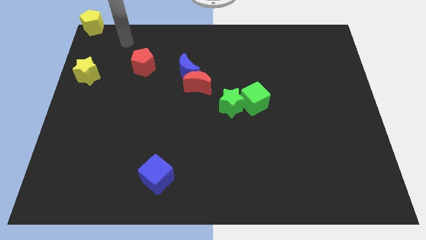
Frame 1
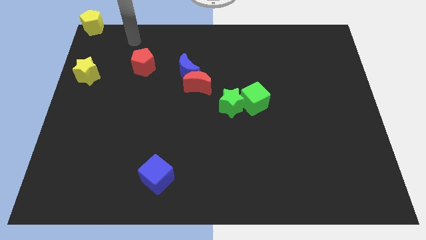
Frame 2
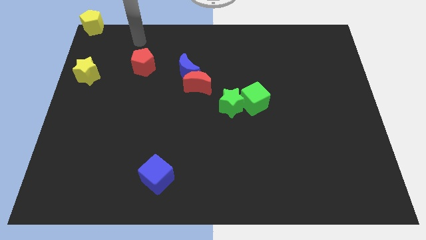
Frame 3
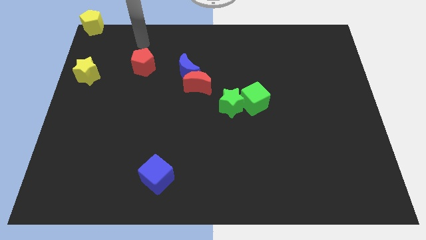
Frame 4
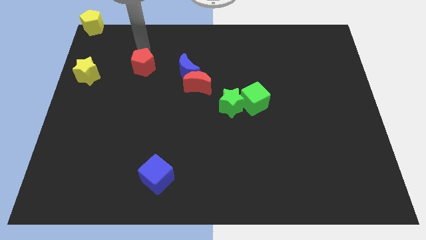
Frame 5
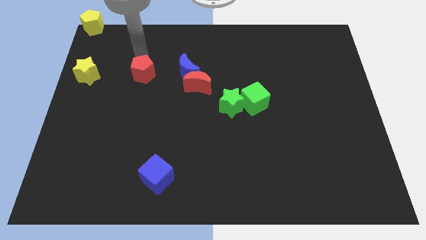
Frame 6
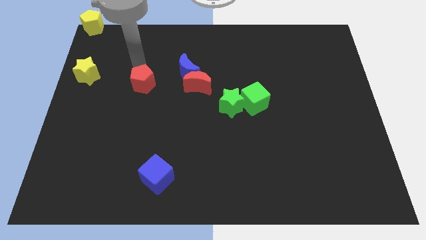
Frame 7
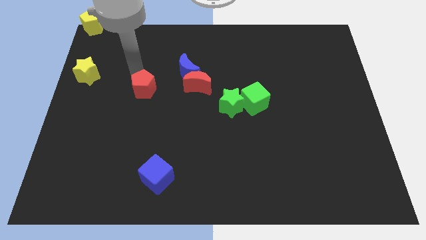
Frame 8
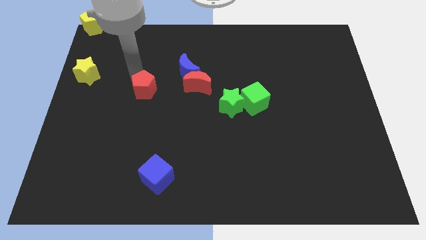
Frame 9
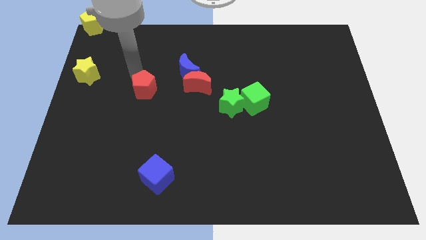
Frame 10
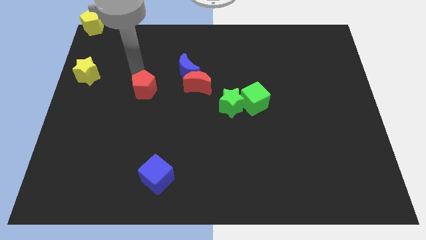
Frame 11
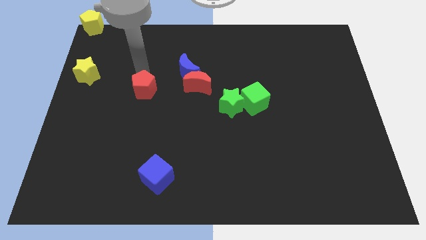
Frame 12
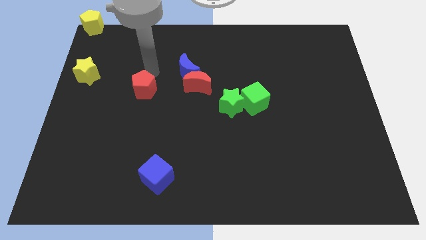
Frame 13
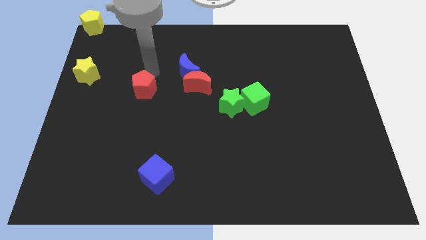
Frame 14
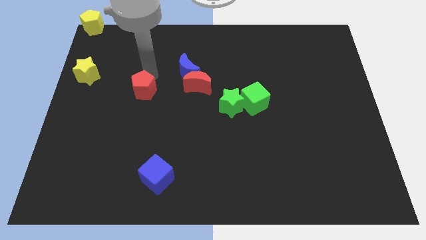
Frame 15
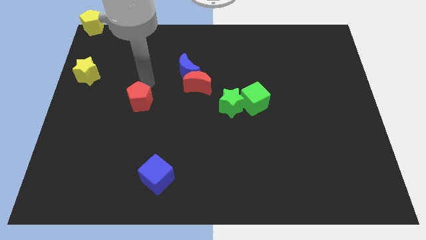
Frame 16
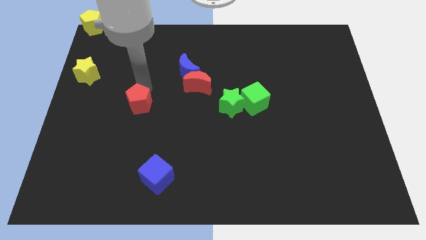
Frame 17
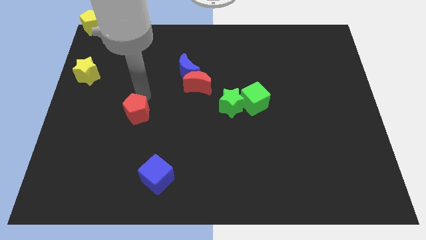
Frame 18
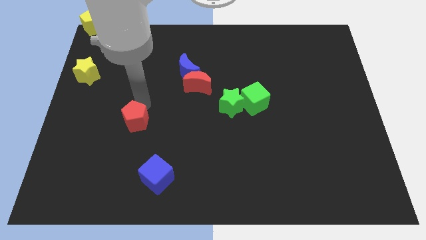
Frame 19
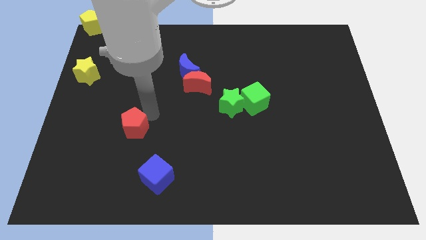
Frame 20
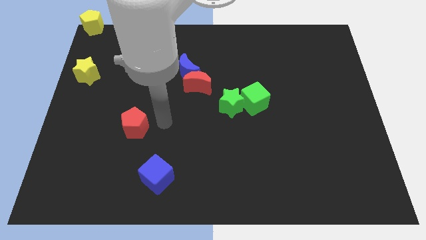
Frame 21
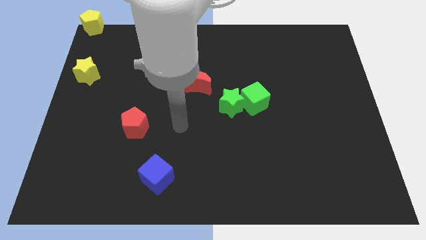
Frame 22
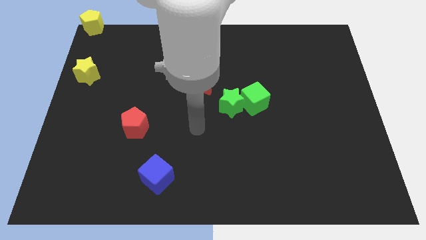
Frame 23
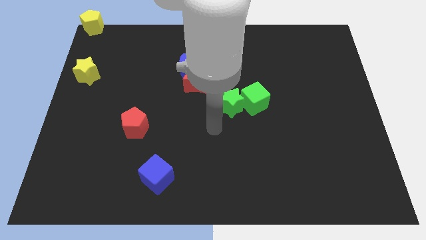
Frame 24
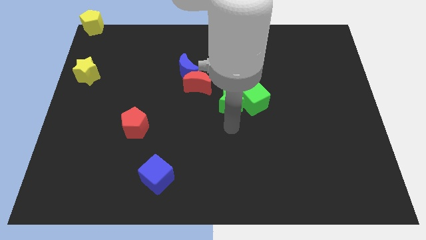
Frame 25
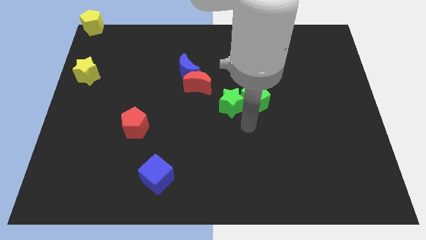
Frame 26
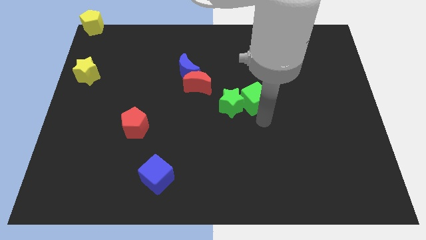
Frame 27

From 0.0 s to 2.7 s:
push red pentagon slightly towards the bottom side of the board

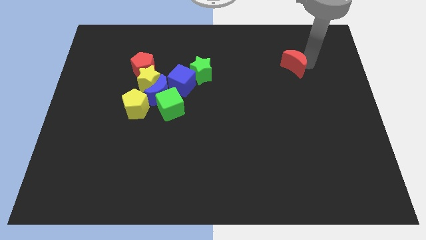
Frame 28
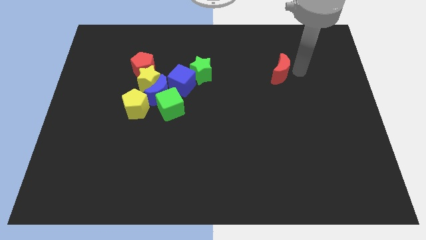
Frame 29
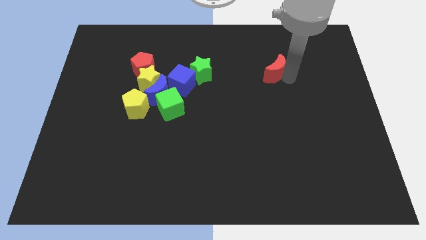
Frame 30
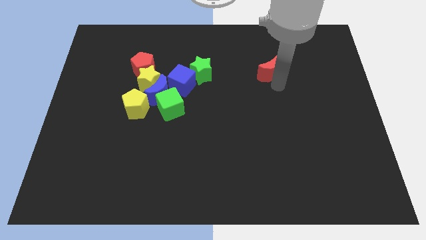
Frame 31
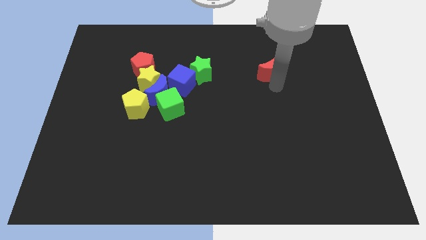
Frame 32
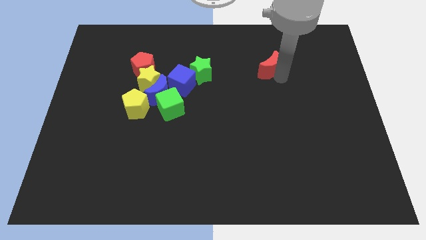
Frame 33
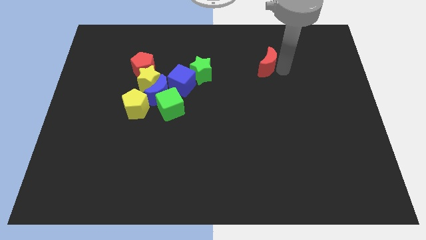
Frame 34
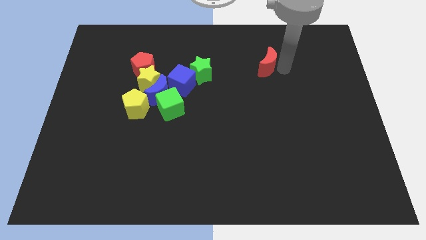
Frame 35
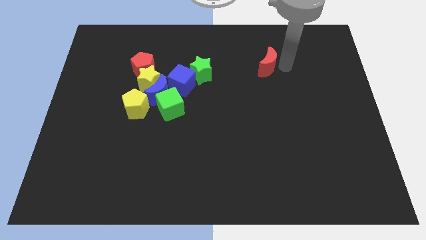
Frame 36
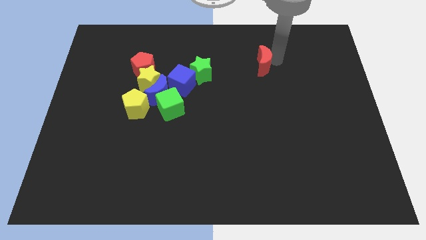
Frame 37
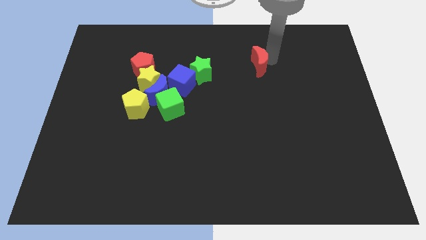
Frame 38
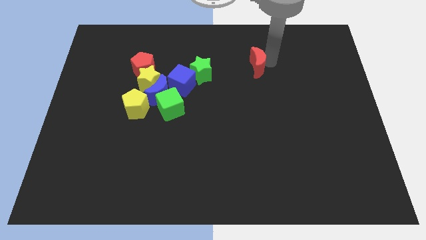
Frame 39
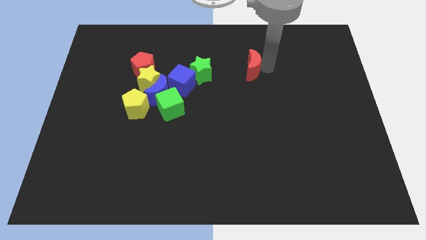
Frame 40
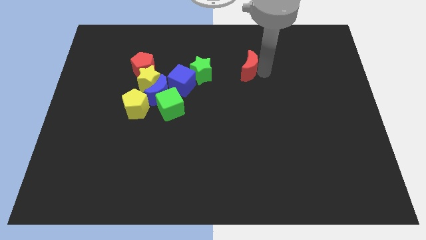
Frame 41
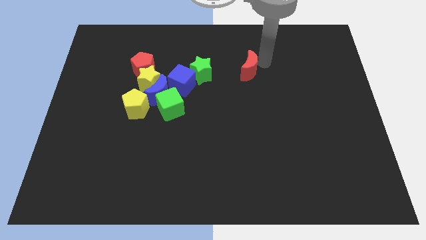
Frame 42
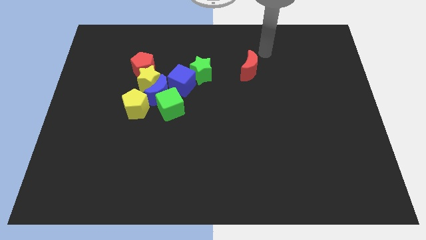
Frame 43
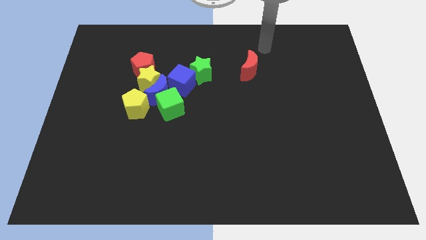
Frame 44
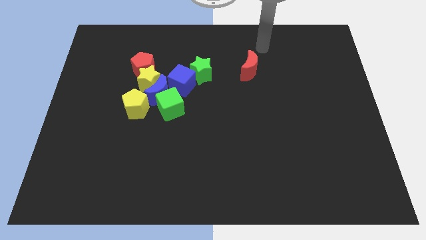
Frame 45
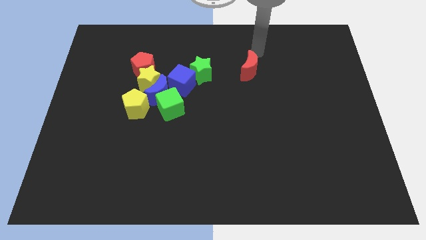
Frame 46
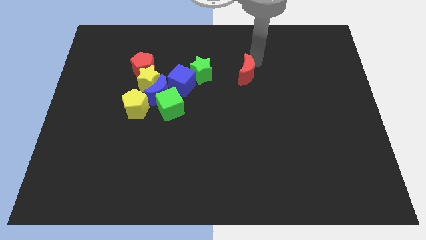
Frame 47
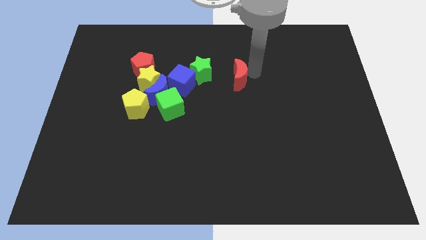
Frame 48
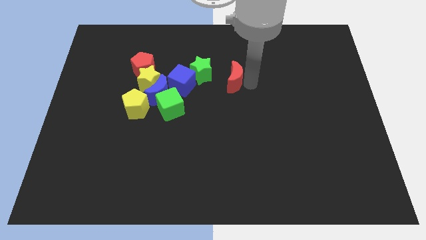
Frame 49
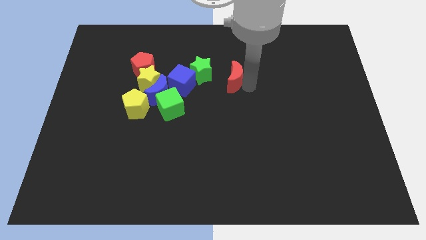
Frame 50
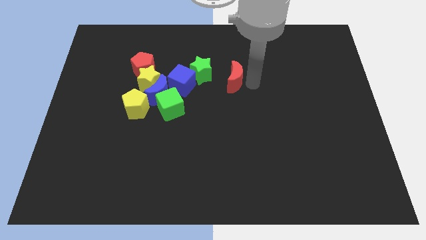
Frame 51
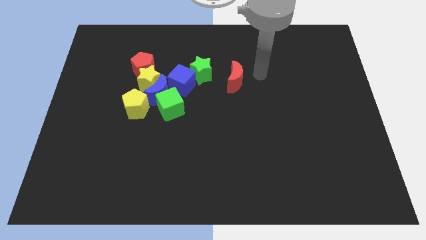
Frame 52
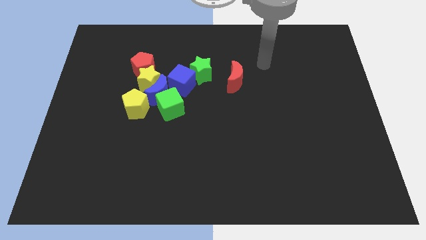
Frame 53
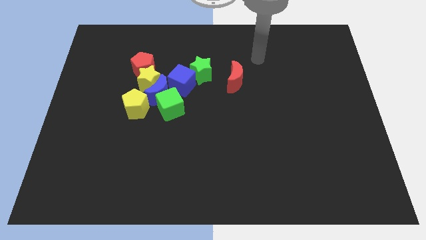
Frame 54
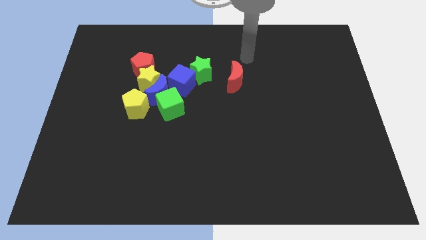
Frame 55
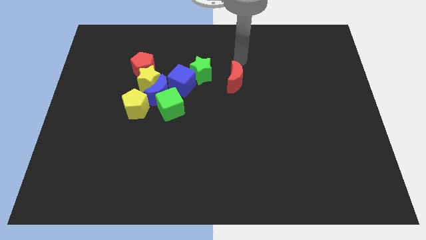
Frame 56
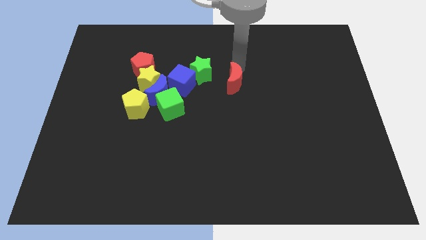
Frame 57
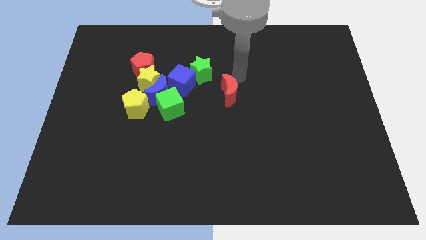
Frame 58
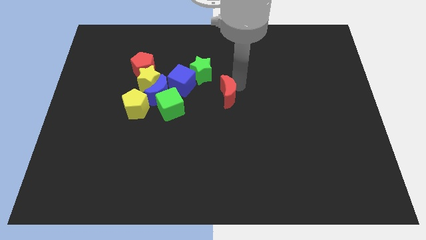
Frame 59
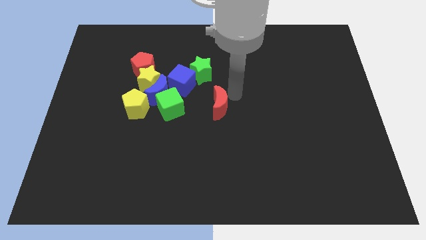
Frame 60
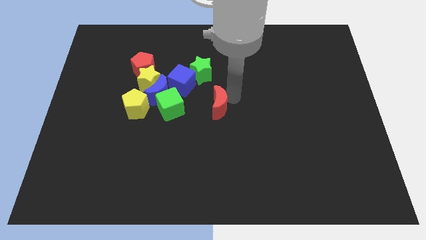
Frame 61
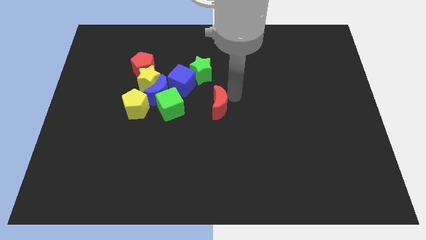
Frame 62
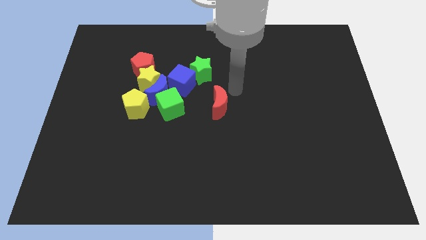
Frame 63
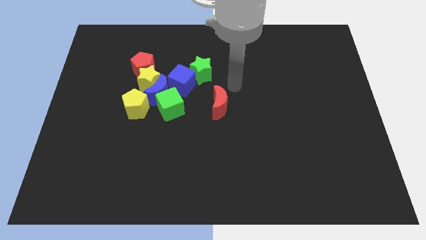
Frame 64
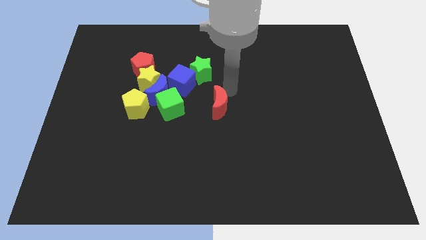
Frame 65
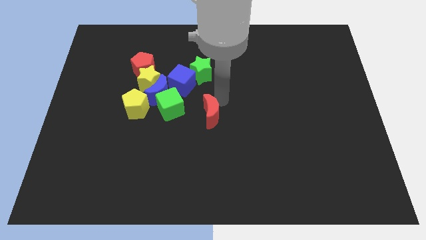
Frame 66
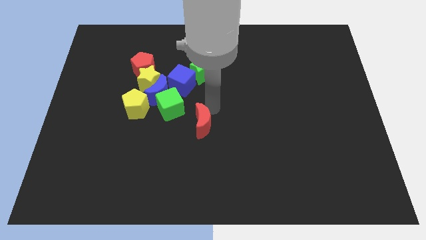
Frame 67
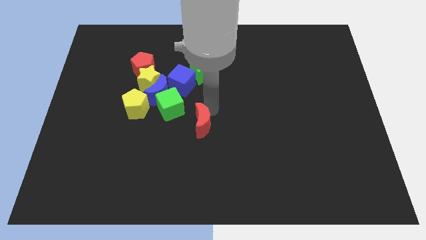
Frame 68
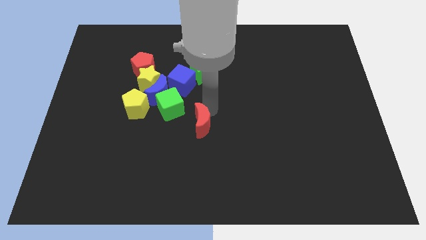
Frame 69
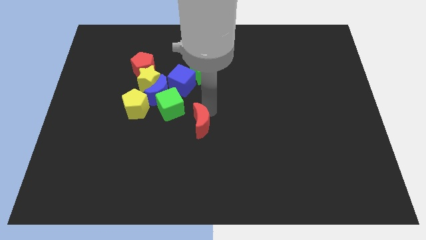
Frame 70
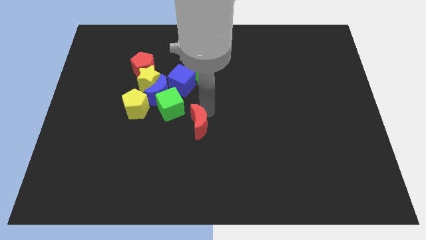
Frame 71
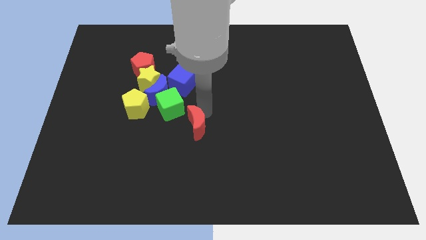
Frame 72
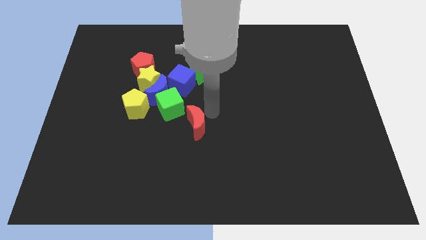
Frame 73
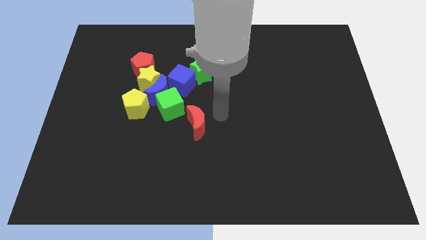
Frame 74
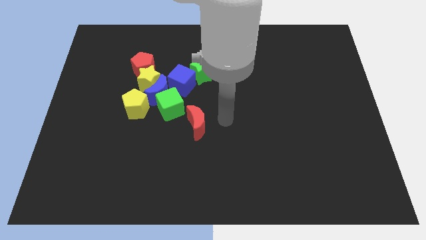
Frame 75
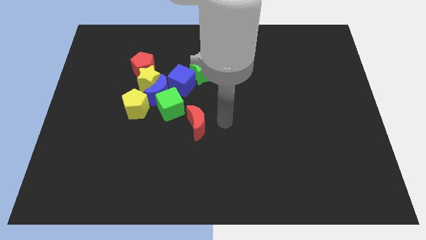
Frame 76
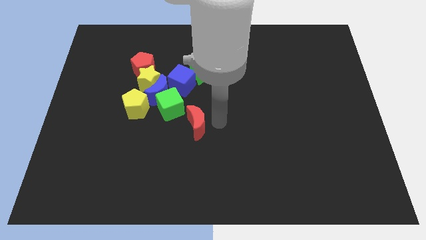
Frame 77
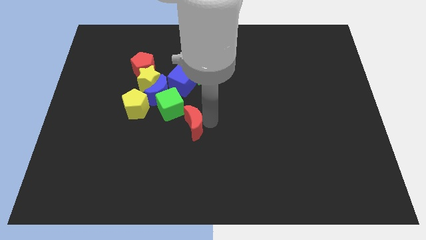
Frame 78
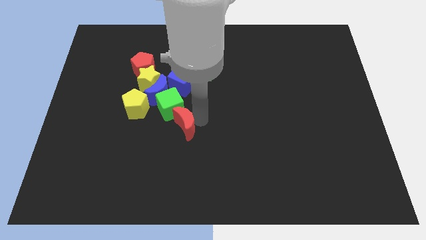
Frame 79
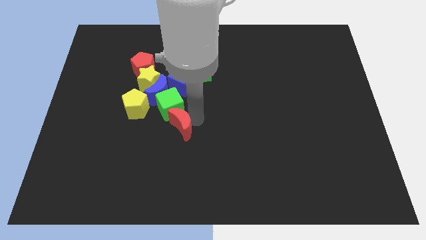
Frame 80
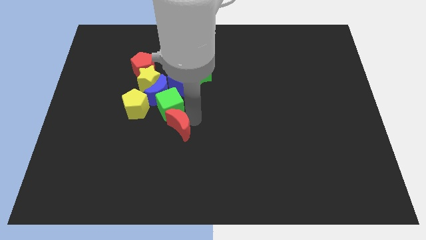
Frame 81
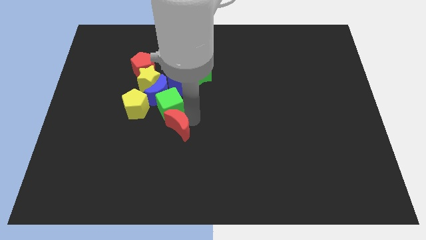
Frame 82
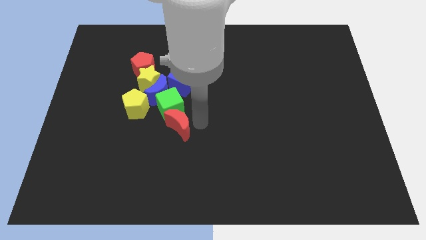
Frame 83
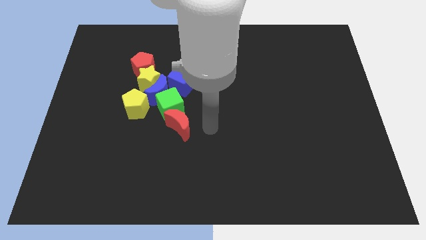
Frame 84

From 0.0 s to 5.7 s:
place the red crescent below the green cube

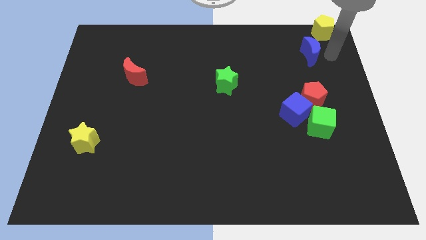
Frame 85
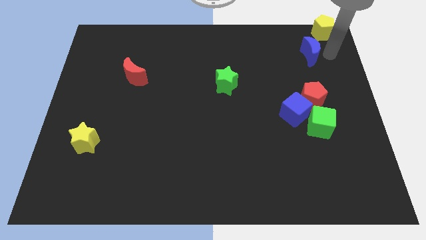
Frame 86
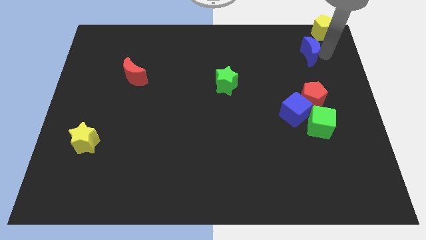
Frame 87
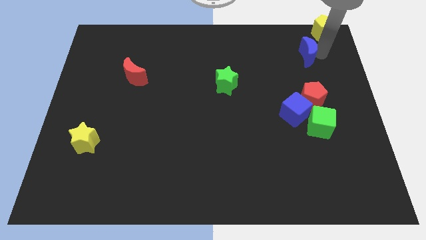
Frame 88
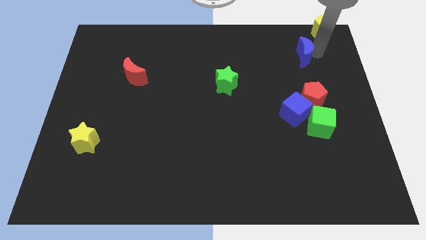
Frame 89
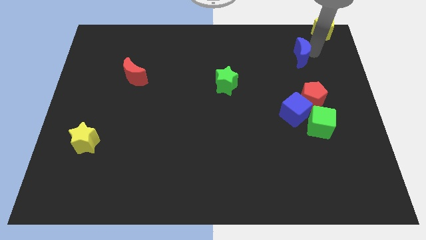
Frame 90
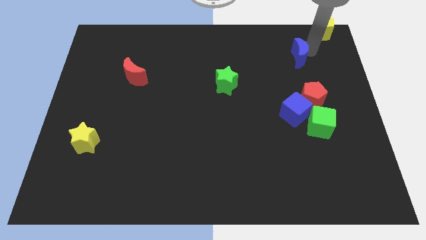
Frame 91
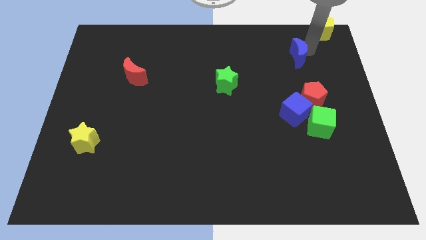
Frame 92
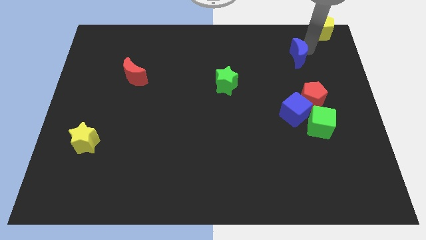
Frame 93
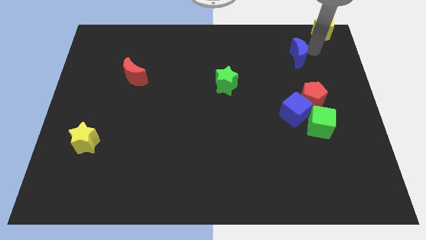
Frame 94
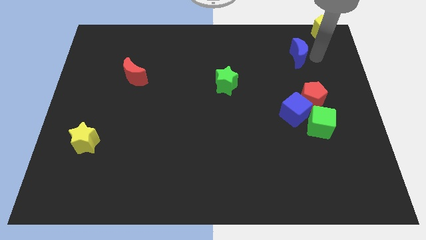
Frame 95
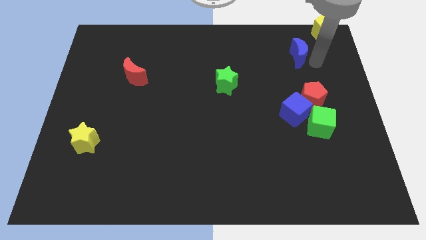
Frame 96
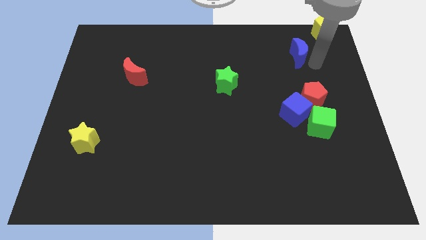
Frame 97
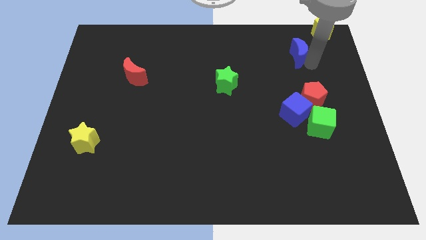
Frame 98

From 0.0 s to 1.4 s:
place blue moon to the top of blue cube
